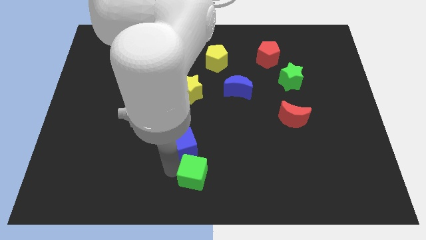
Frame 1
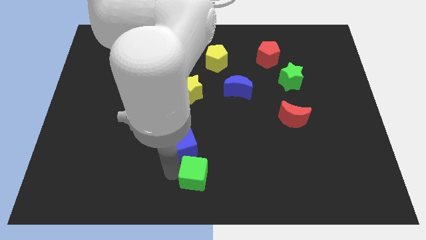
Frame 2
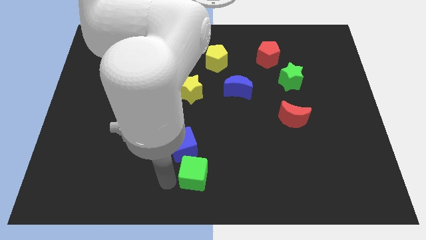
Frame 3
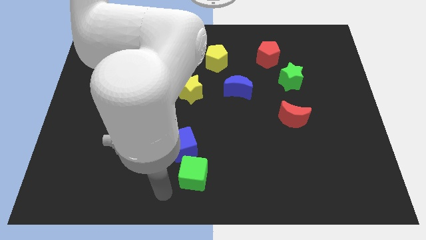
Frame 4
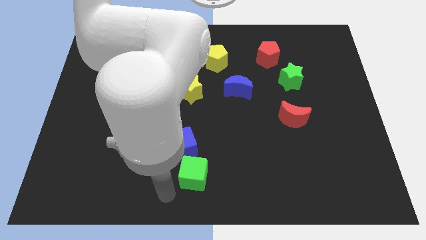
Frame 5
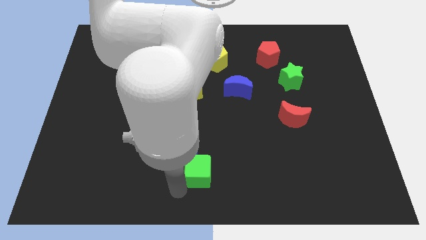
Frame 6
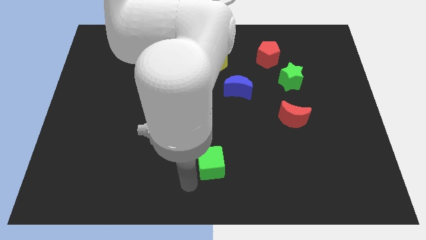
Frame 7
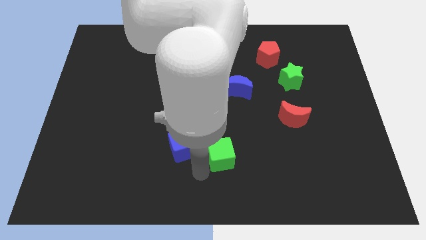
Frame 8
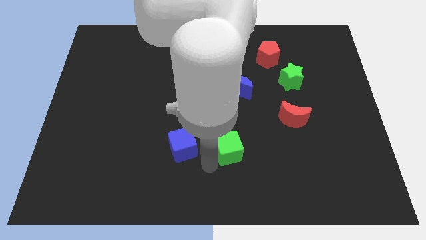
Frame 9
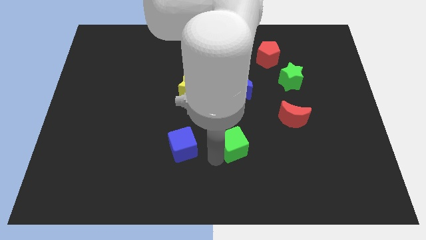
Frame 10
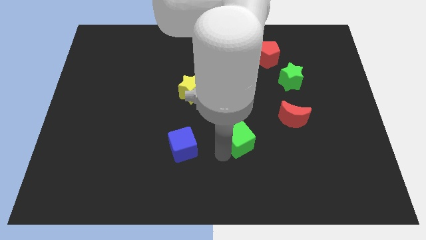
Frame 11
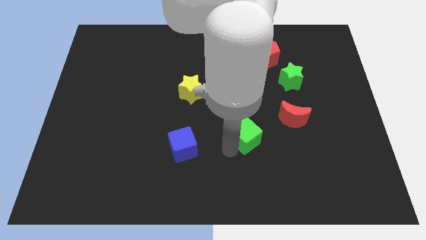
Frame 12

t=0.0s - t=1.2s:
separate the green cube from the blue cube

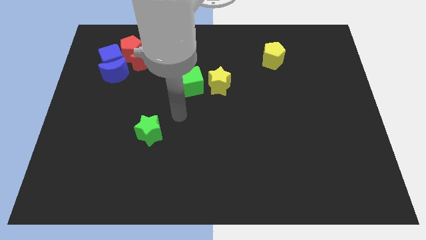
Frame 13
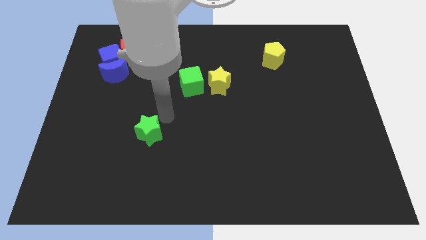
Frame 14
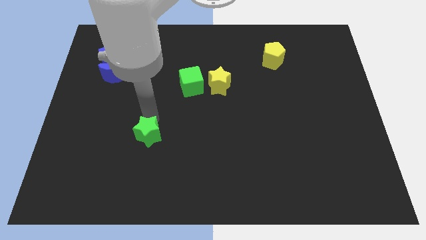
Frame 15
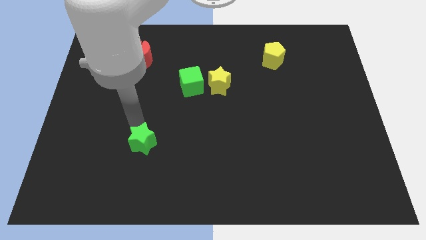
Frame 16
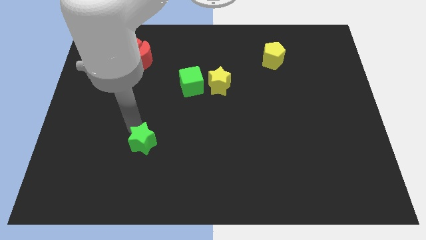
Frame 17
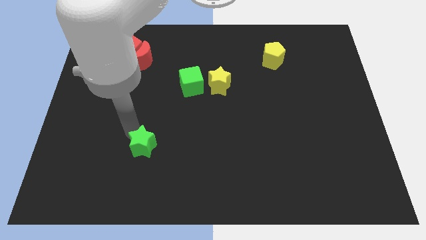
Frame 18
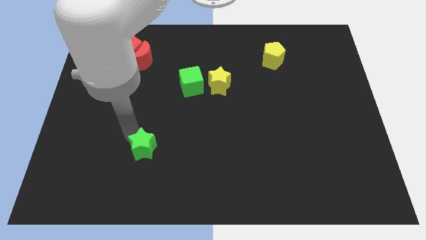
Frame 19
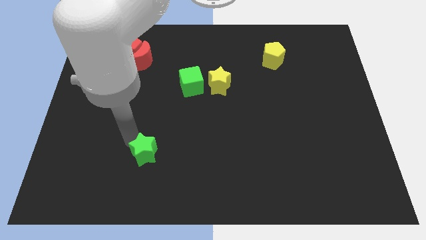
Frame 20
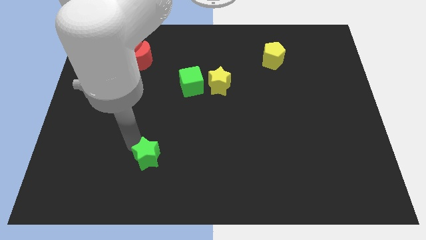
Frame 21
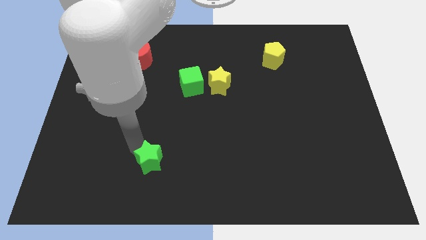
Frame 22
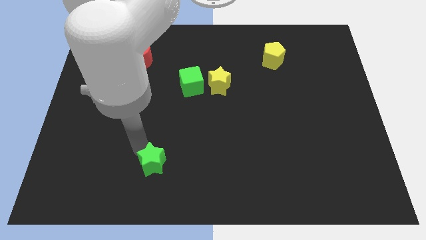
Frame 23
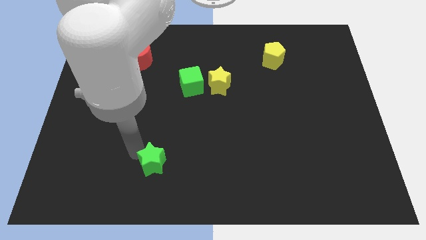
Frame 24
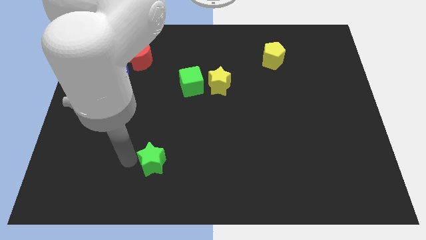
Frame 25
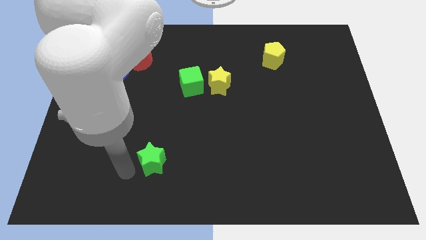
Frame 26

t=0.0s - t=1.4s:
move the green star slightly downwards

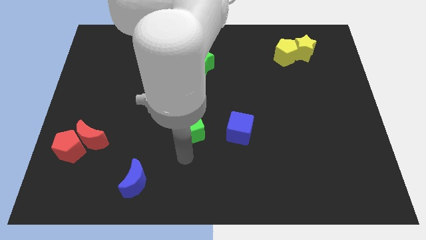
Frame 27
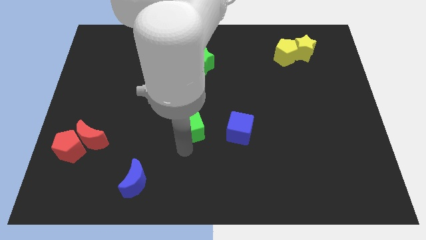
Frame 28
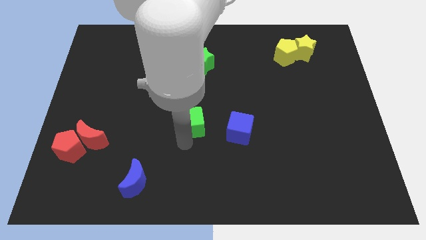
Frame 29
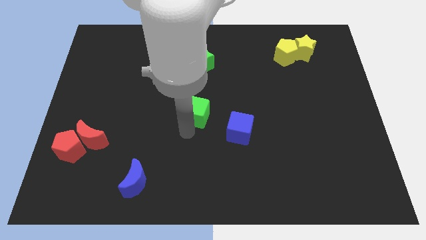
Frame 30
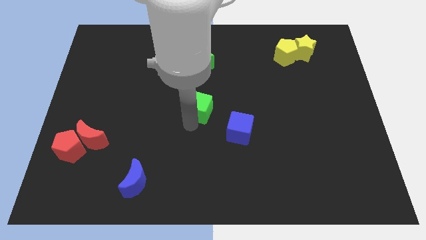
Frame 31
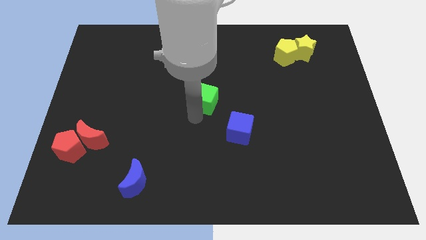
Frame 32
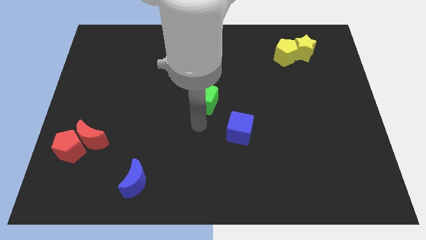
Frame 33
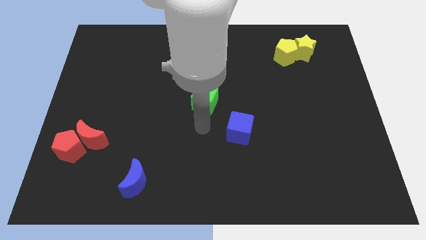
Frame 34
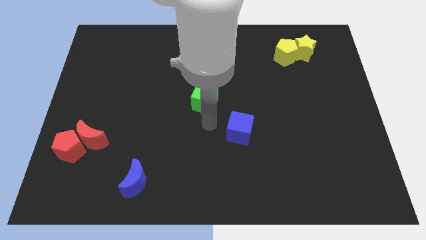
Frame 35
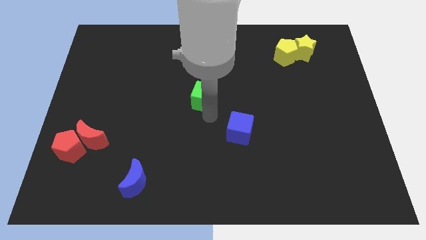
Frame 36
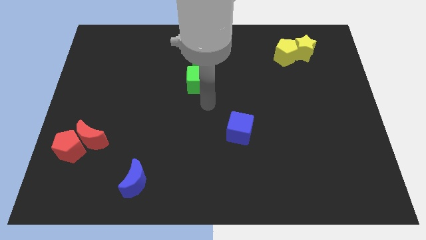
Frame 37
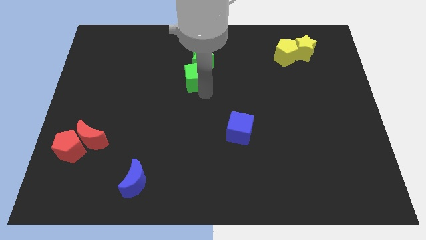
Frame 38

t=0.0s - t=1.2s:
place the green cube below the green star

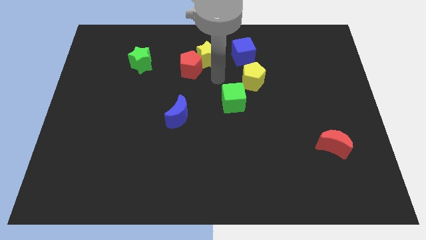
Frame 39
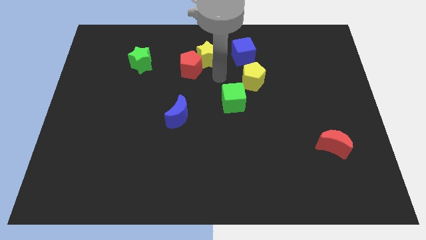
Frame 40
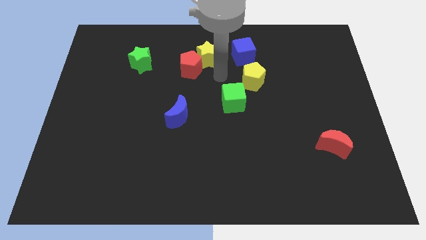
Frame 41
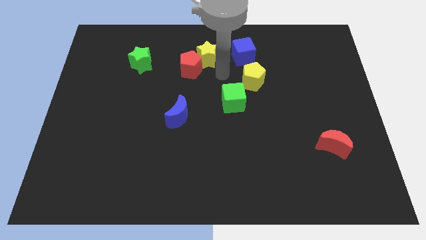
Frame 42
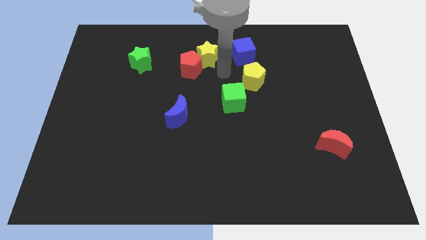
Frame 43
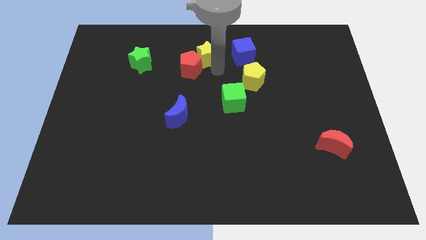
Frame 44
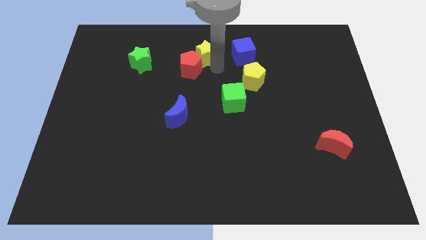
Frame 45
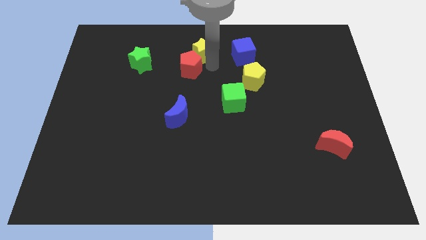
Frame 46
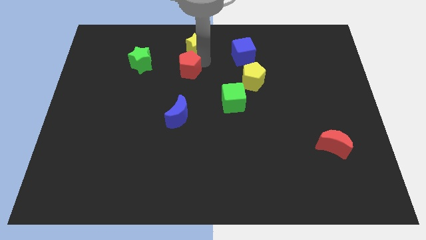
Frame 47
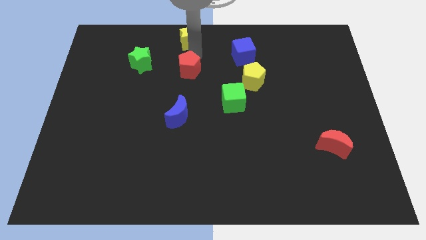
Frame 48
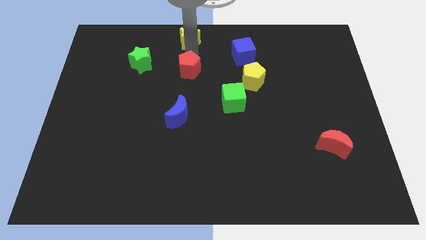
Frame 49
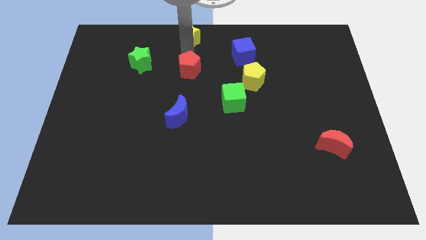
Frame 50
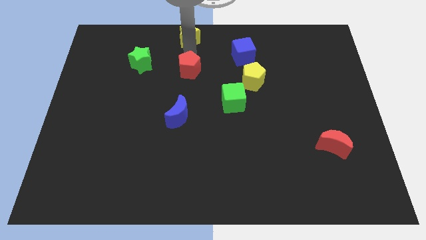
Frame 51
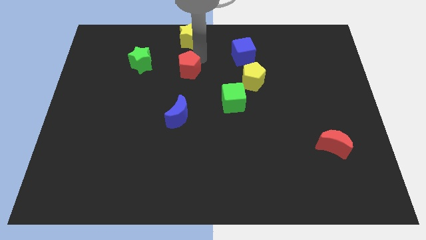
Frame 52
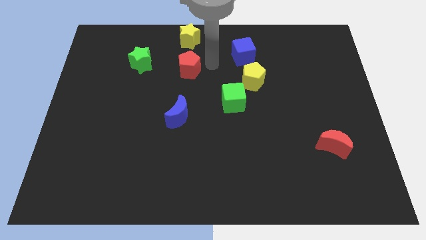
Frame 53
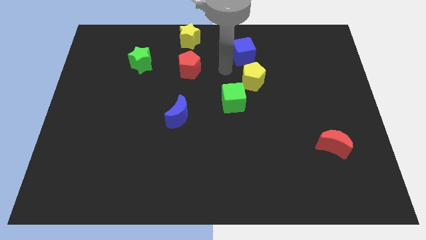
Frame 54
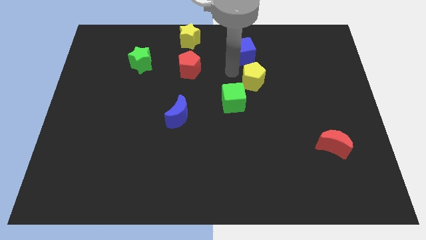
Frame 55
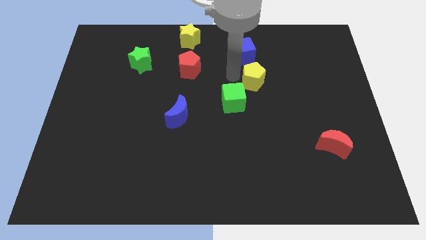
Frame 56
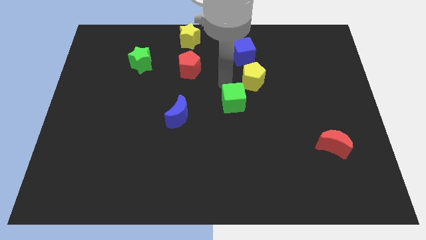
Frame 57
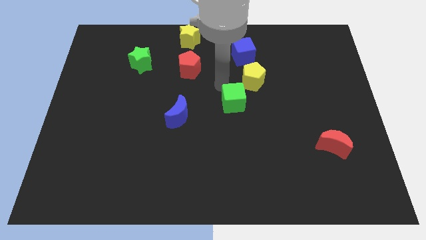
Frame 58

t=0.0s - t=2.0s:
place the yellow star vertically above the red pentagon

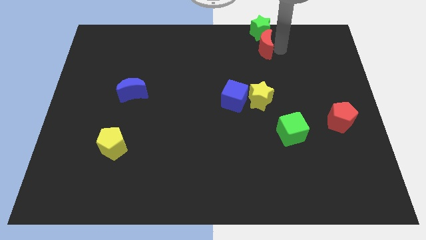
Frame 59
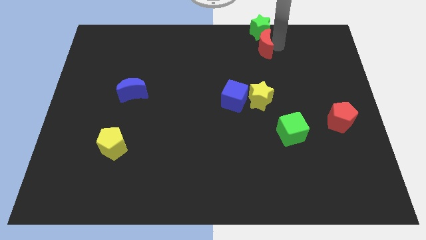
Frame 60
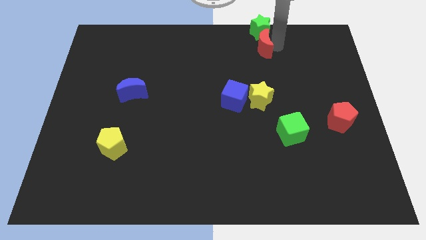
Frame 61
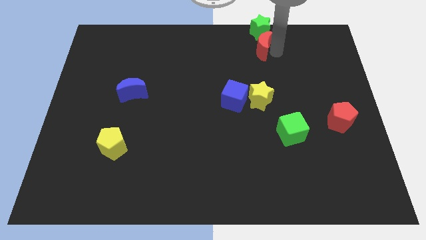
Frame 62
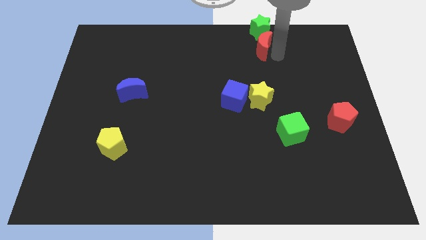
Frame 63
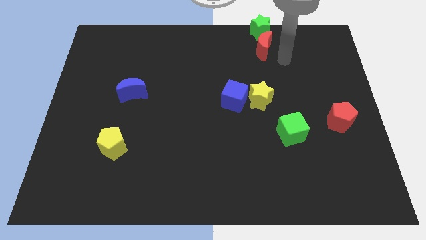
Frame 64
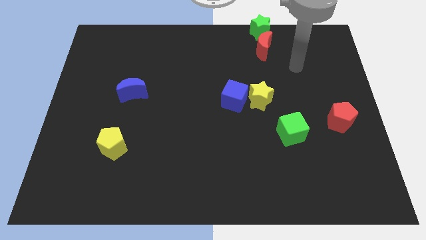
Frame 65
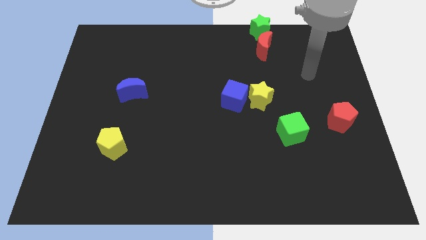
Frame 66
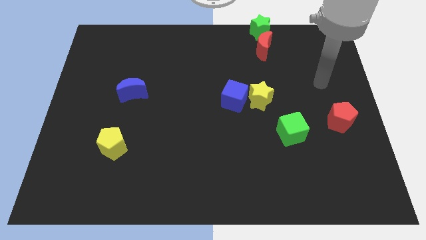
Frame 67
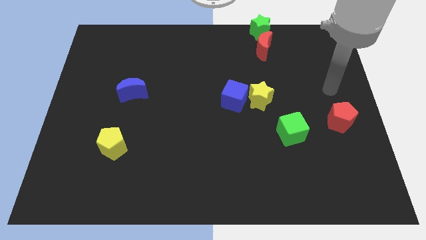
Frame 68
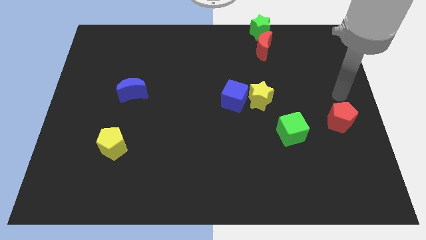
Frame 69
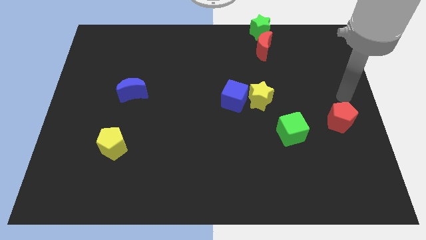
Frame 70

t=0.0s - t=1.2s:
place the arm above the red pentagon

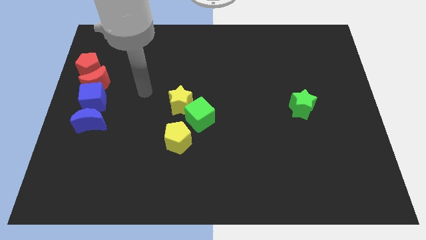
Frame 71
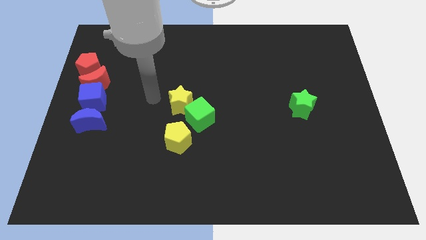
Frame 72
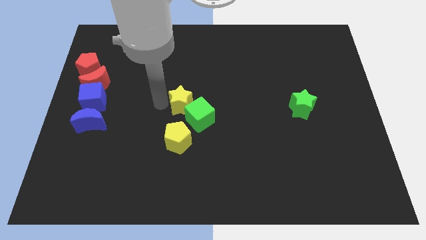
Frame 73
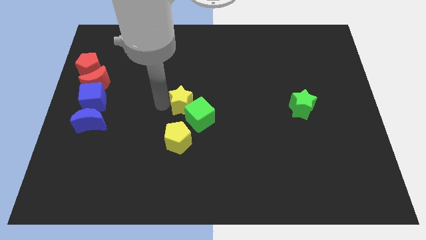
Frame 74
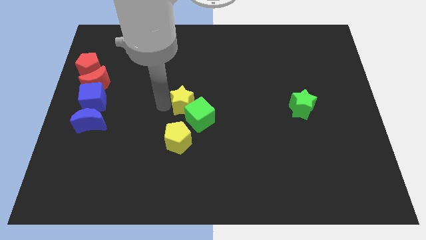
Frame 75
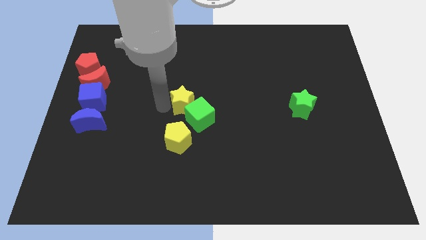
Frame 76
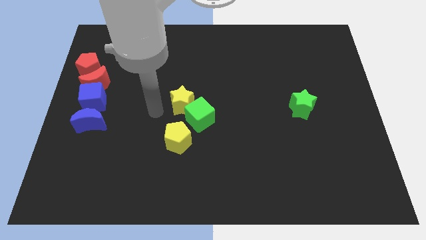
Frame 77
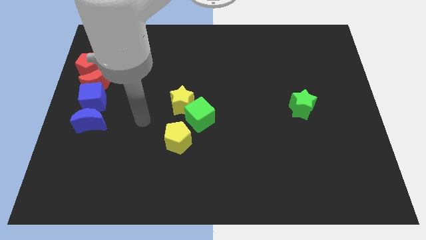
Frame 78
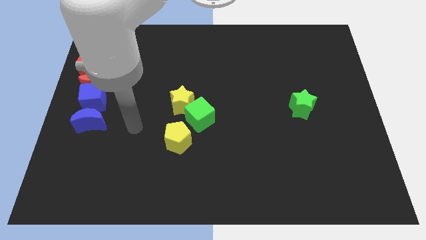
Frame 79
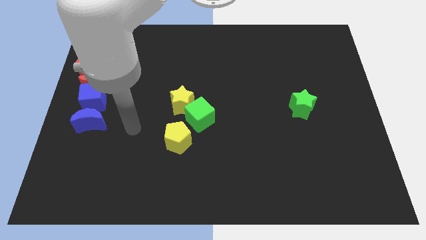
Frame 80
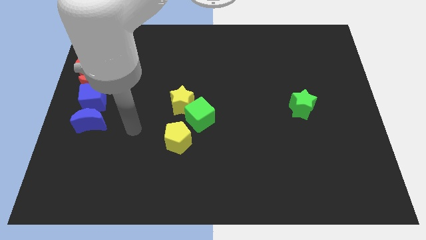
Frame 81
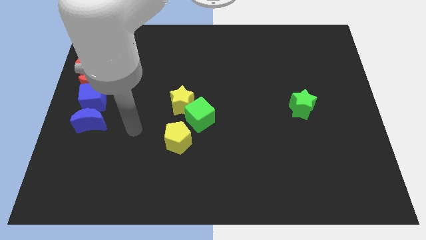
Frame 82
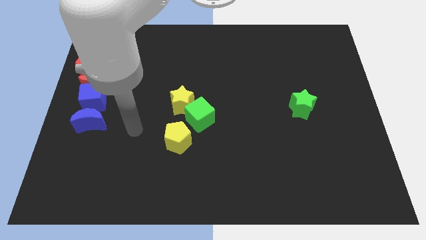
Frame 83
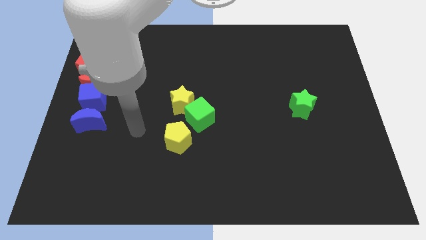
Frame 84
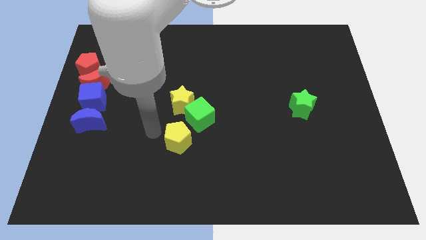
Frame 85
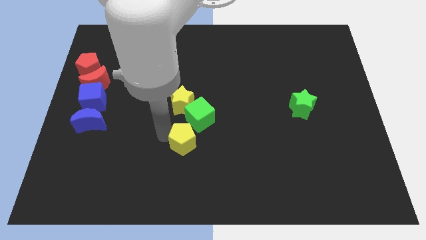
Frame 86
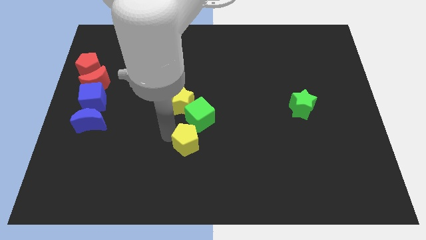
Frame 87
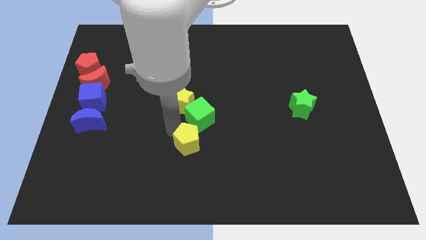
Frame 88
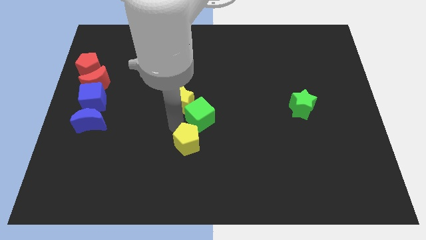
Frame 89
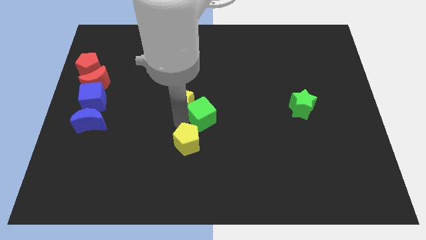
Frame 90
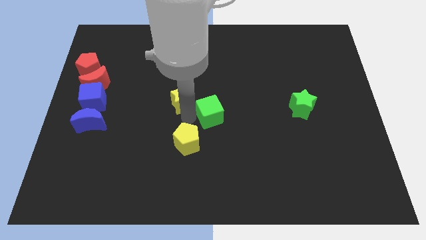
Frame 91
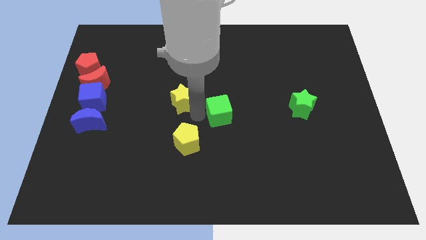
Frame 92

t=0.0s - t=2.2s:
tap the yellow star and yellow pentagon
